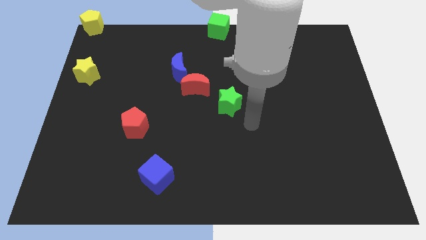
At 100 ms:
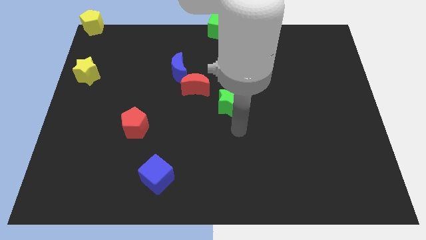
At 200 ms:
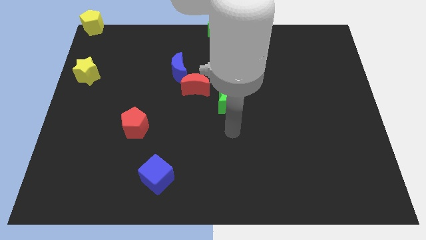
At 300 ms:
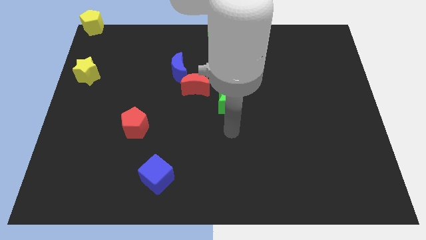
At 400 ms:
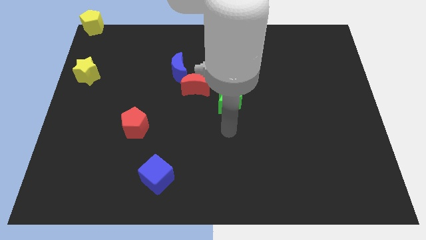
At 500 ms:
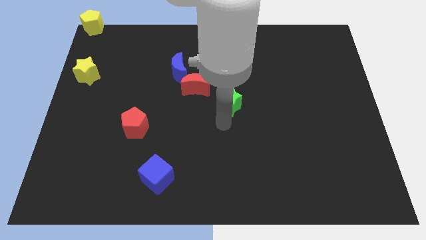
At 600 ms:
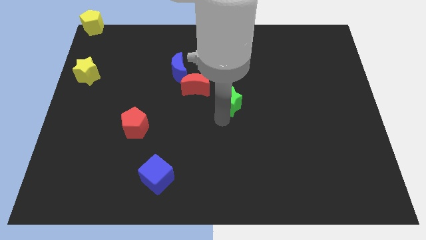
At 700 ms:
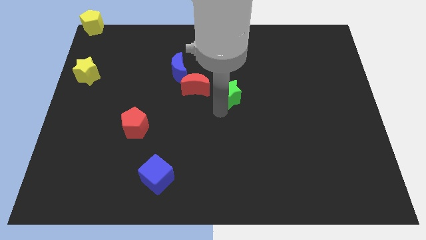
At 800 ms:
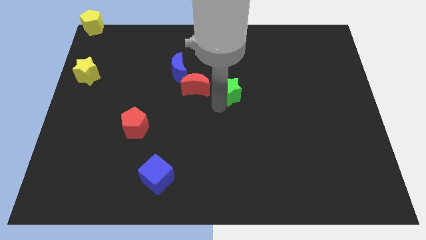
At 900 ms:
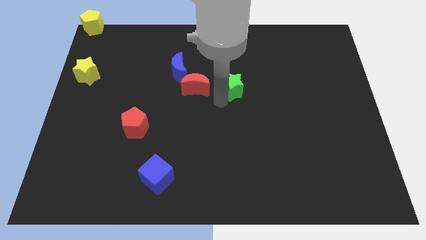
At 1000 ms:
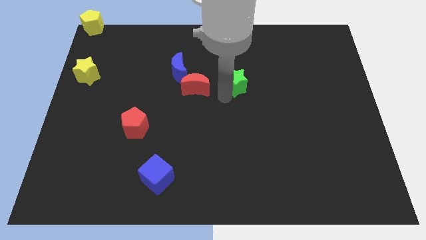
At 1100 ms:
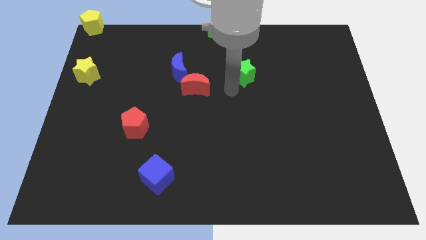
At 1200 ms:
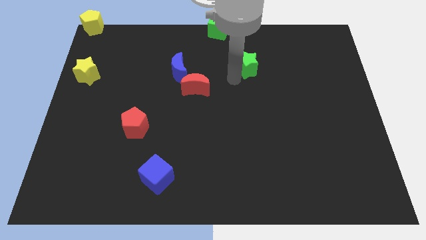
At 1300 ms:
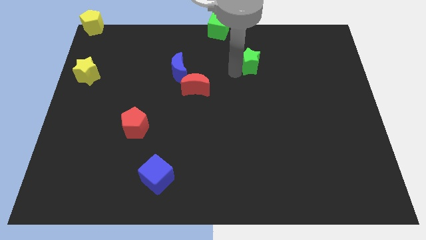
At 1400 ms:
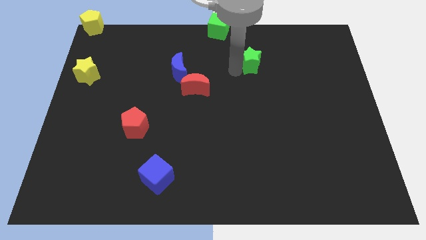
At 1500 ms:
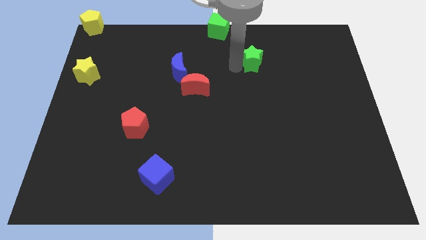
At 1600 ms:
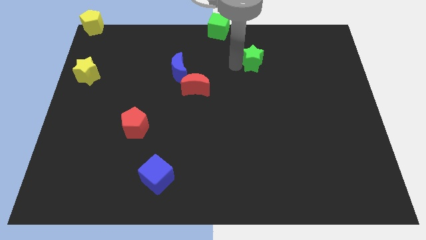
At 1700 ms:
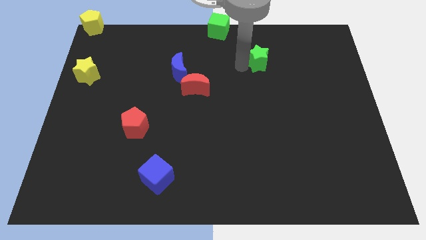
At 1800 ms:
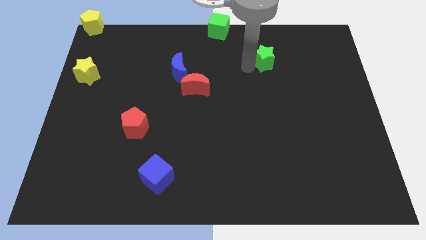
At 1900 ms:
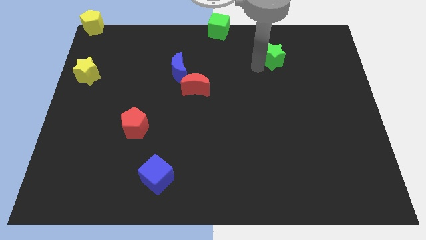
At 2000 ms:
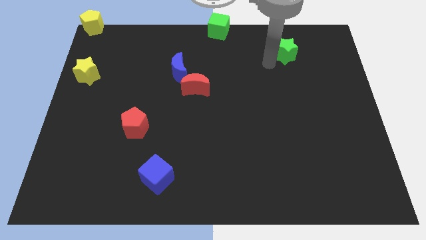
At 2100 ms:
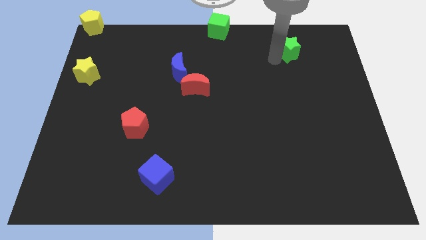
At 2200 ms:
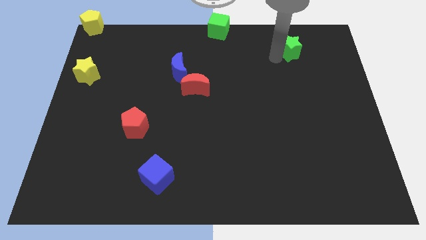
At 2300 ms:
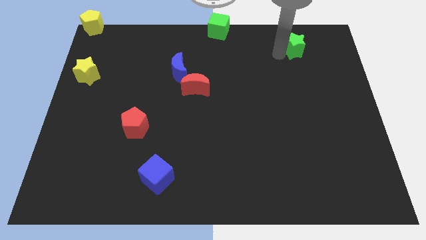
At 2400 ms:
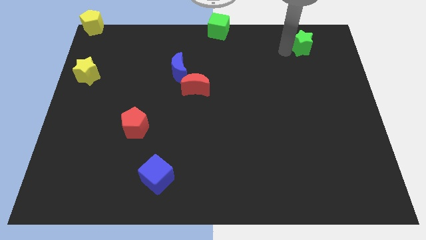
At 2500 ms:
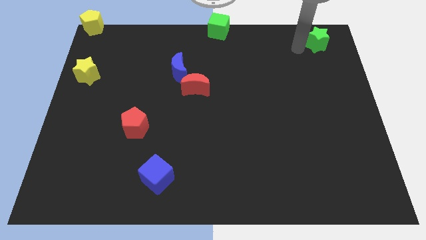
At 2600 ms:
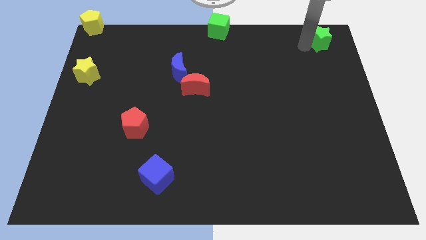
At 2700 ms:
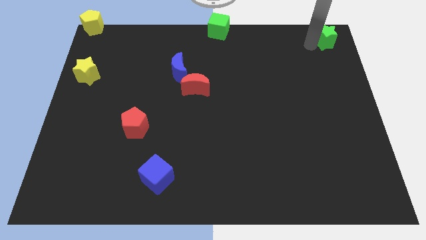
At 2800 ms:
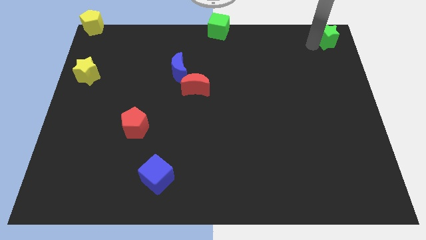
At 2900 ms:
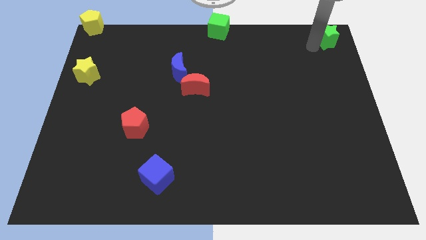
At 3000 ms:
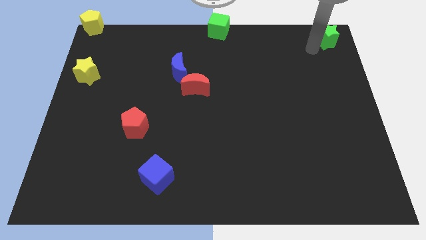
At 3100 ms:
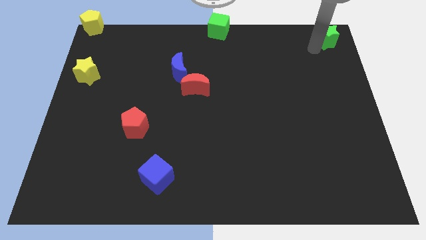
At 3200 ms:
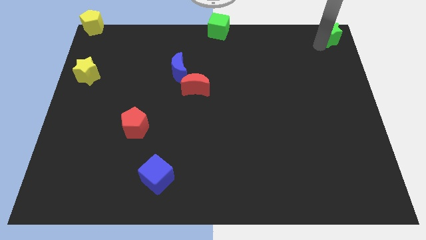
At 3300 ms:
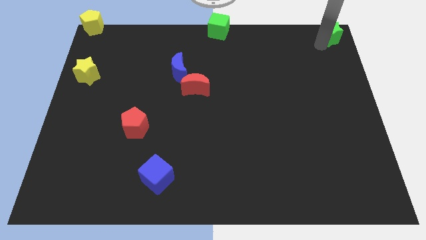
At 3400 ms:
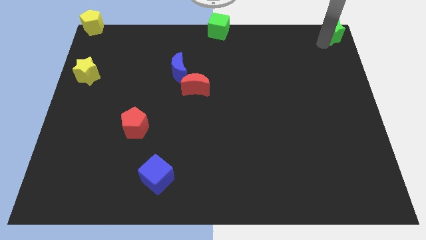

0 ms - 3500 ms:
move the green star towards the top right corner of the board

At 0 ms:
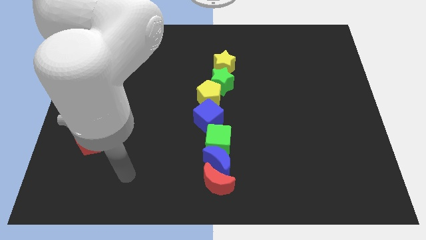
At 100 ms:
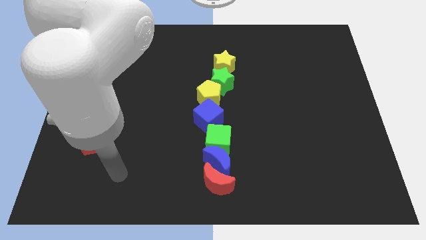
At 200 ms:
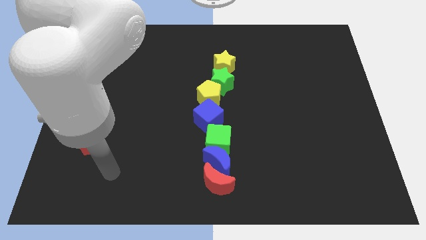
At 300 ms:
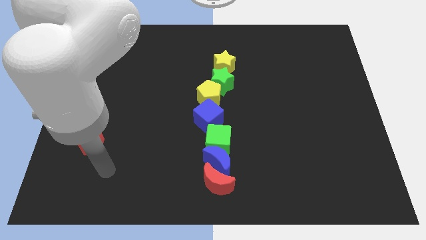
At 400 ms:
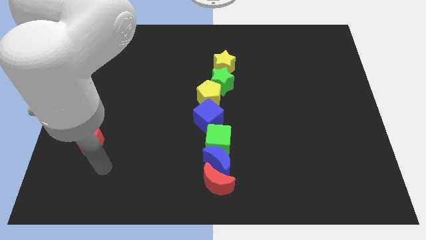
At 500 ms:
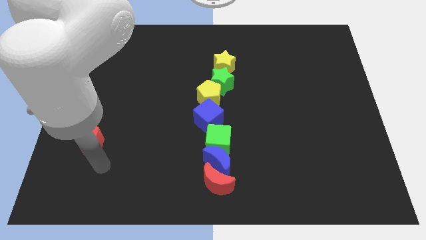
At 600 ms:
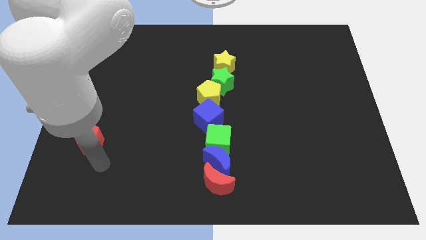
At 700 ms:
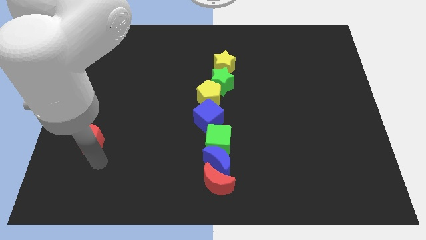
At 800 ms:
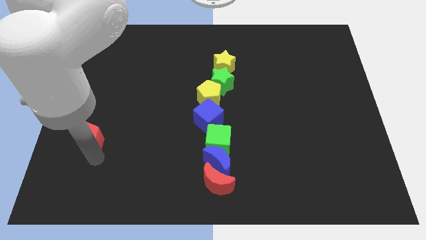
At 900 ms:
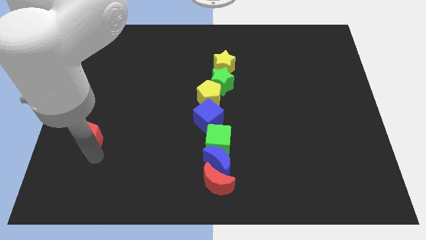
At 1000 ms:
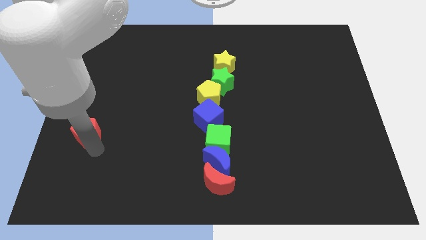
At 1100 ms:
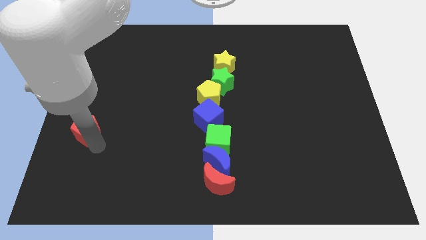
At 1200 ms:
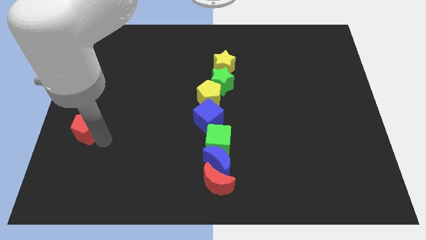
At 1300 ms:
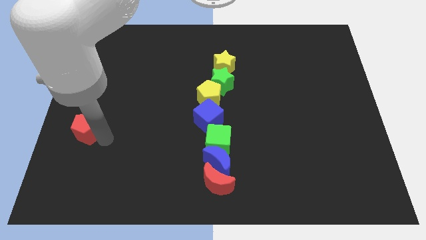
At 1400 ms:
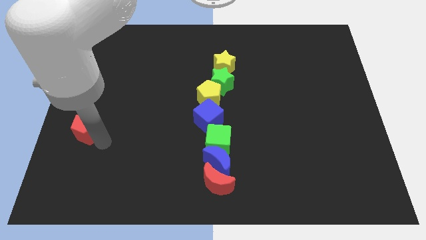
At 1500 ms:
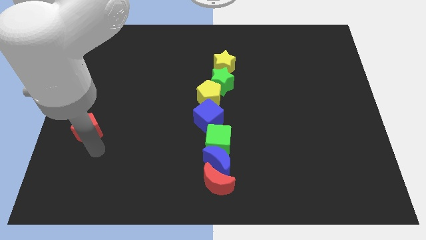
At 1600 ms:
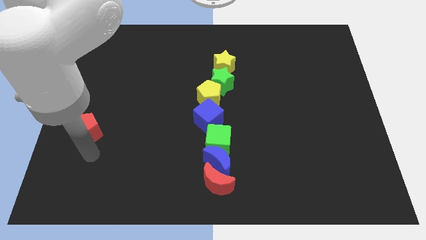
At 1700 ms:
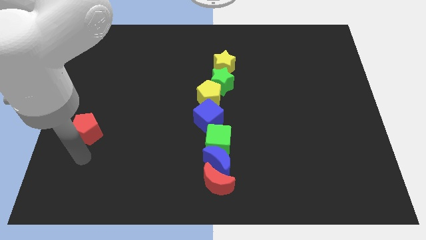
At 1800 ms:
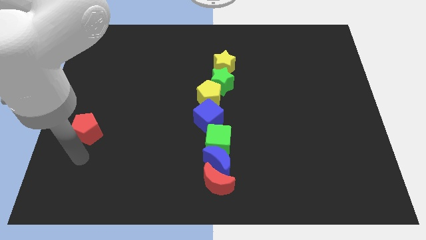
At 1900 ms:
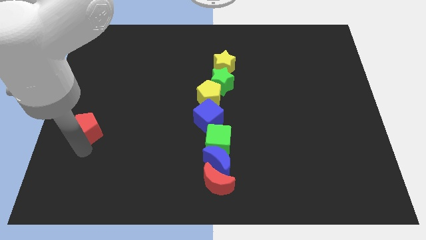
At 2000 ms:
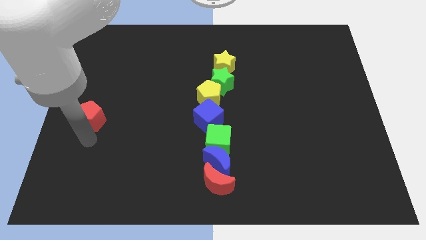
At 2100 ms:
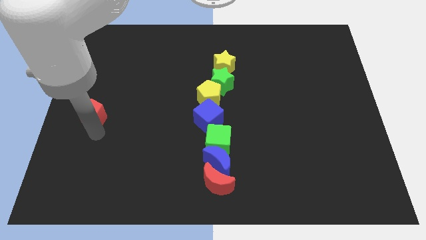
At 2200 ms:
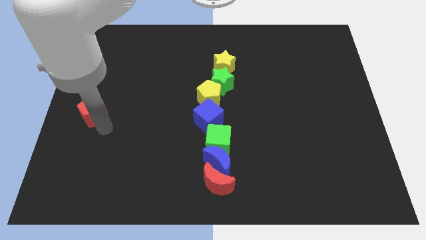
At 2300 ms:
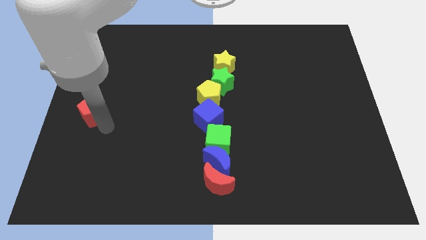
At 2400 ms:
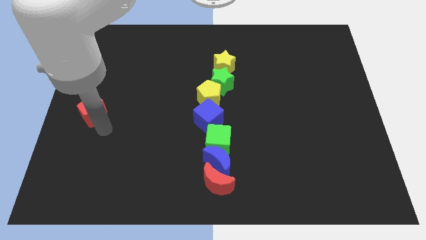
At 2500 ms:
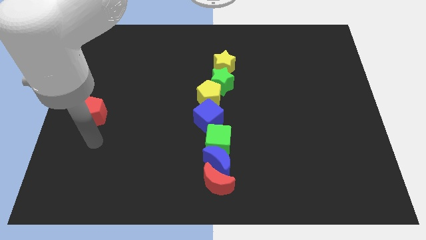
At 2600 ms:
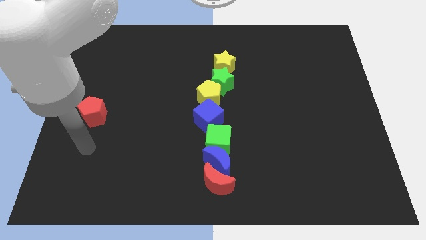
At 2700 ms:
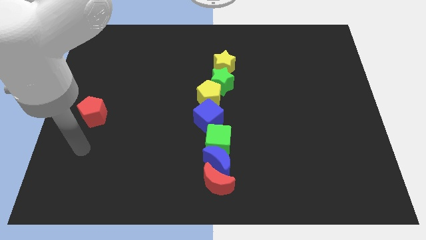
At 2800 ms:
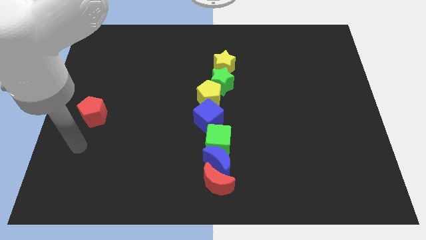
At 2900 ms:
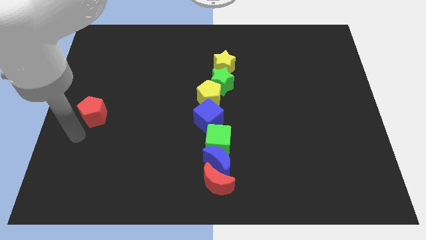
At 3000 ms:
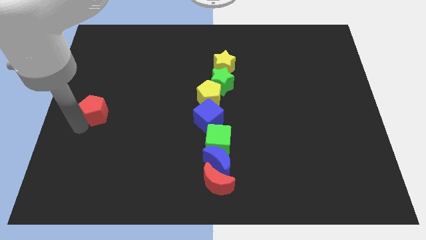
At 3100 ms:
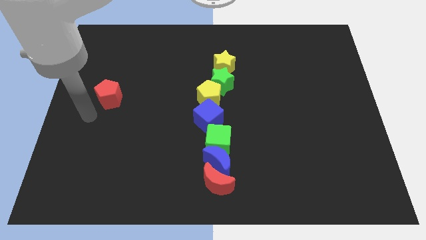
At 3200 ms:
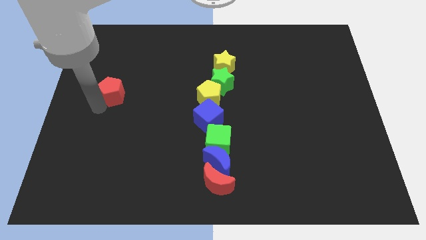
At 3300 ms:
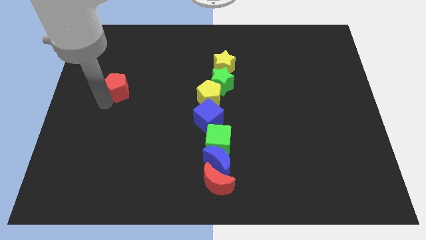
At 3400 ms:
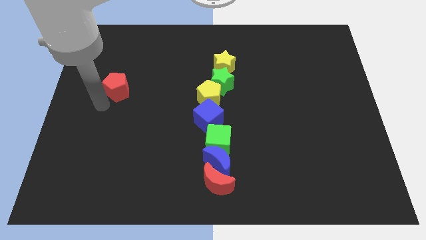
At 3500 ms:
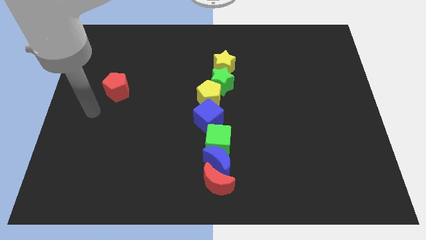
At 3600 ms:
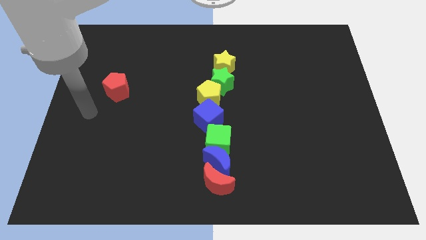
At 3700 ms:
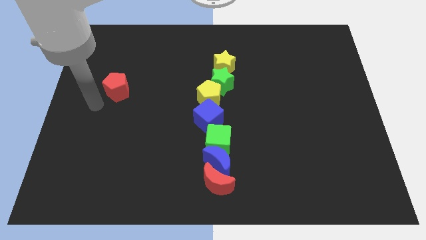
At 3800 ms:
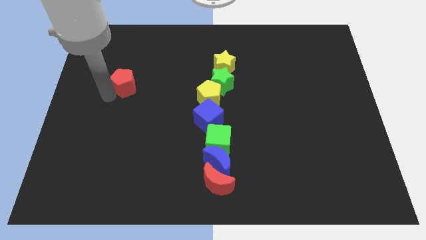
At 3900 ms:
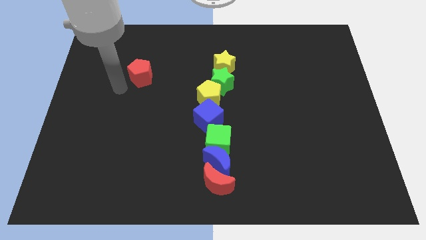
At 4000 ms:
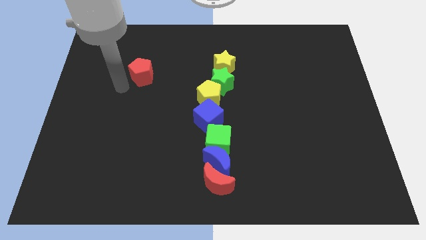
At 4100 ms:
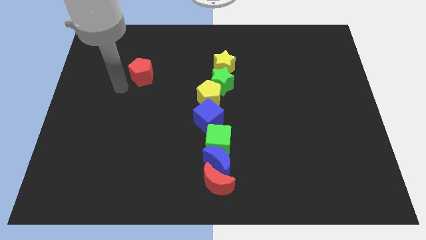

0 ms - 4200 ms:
place the red pentagon to the left side of the green star

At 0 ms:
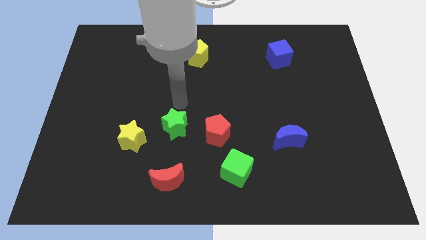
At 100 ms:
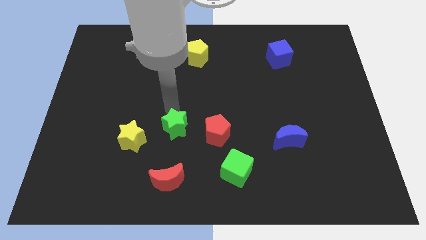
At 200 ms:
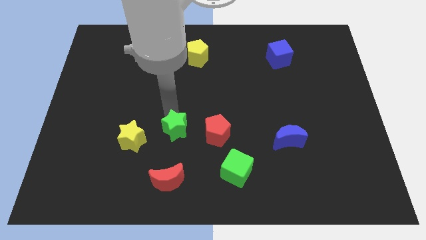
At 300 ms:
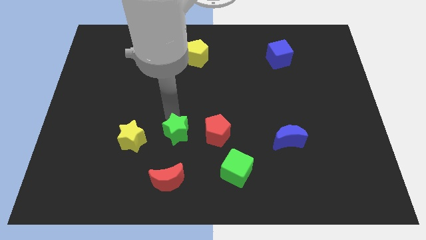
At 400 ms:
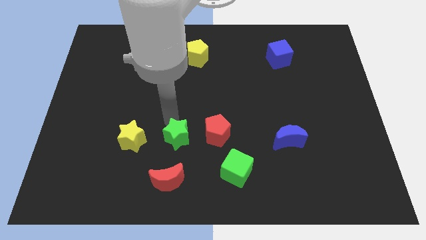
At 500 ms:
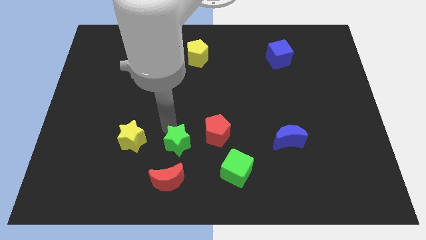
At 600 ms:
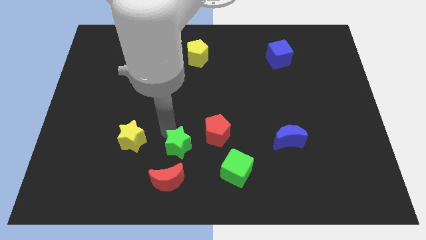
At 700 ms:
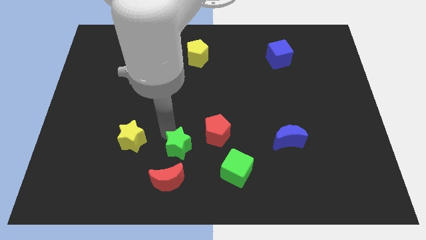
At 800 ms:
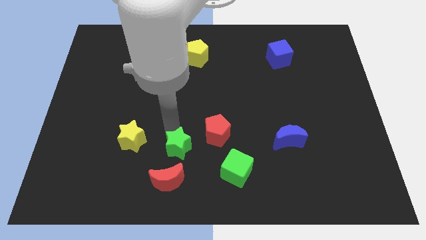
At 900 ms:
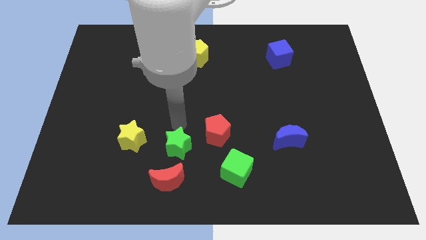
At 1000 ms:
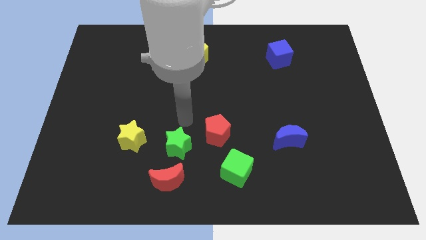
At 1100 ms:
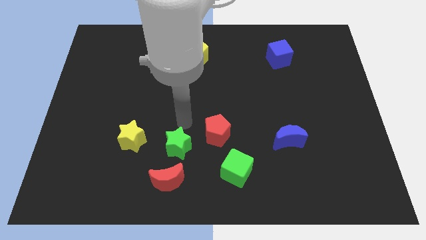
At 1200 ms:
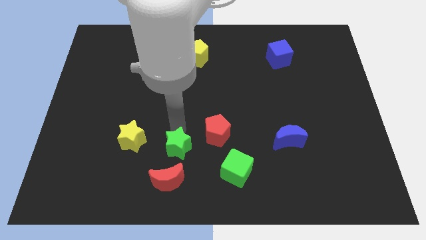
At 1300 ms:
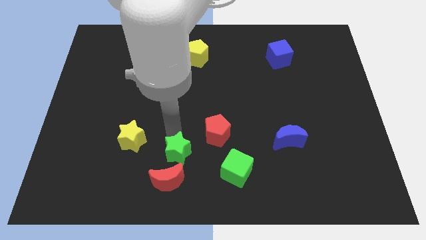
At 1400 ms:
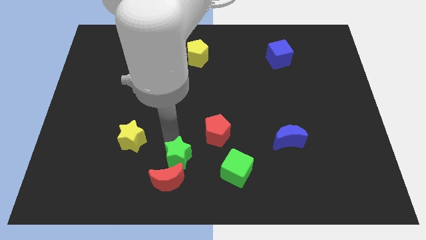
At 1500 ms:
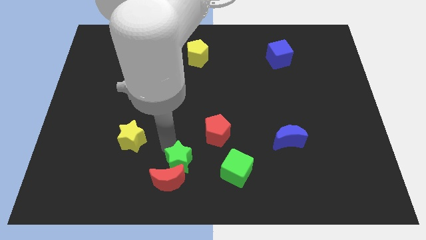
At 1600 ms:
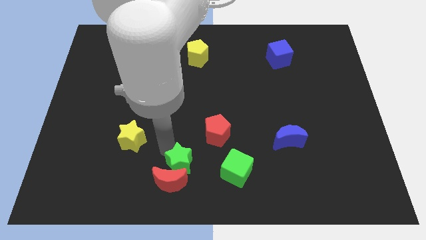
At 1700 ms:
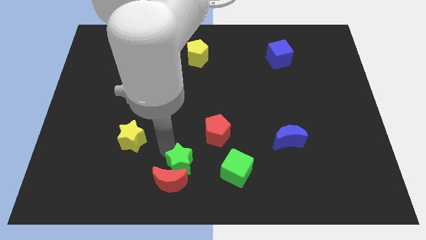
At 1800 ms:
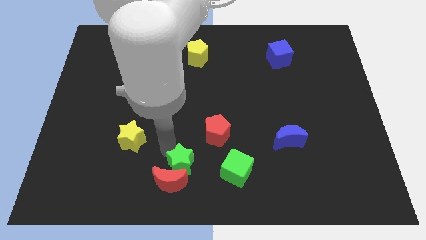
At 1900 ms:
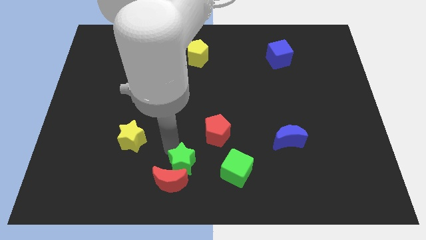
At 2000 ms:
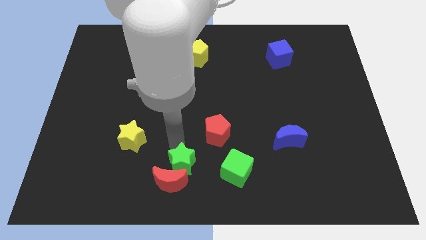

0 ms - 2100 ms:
push the green star into the red crescent
